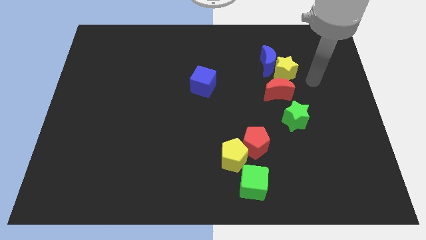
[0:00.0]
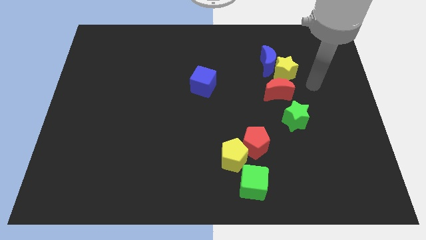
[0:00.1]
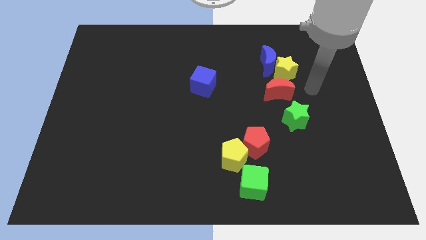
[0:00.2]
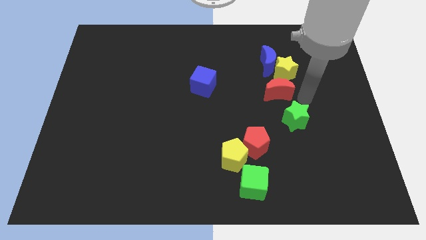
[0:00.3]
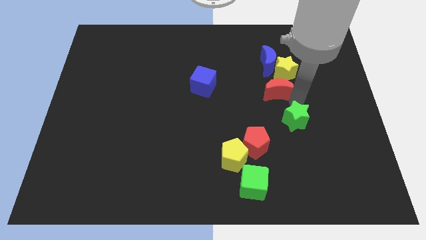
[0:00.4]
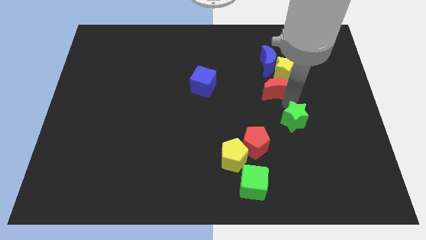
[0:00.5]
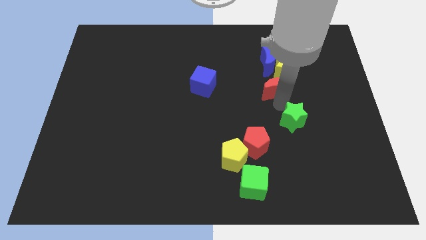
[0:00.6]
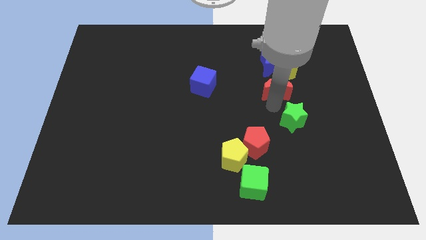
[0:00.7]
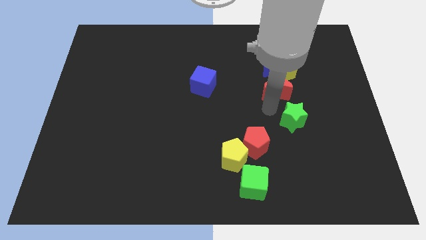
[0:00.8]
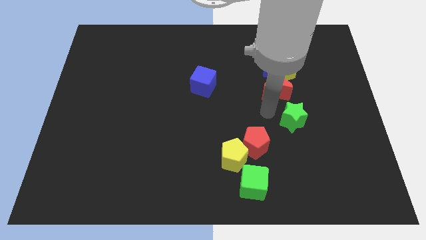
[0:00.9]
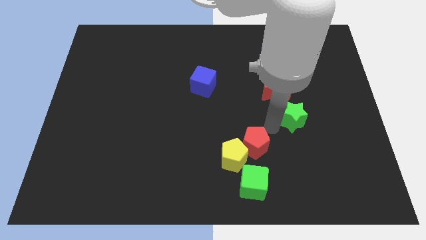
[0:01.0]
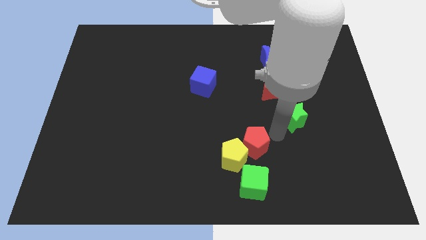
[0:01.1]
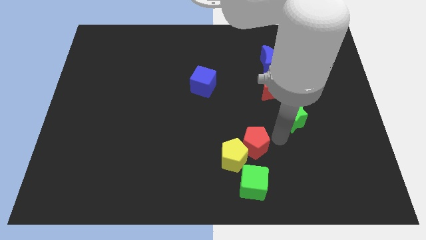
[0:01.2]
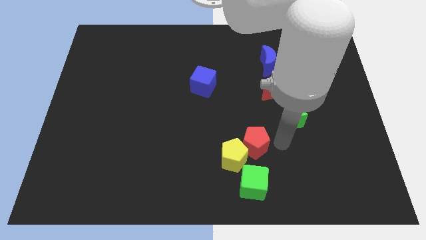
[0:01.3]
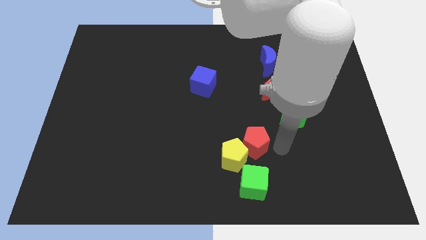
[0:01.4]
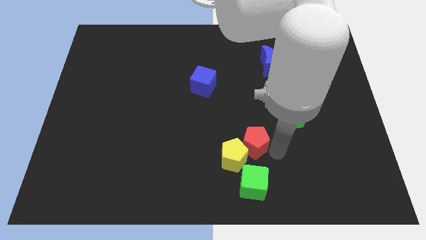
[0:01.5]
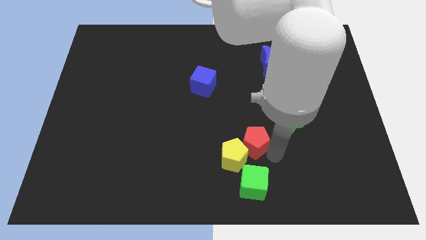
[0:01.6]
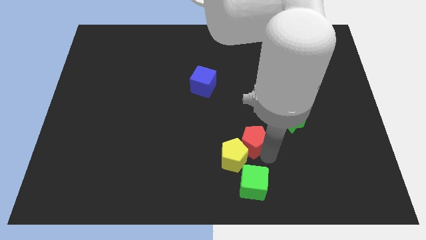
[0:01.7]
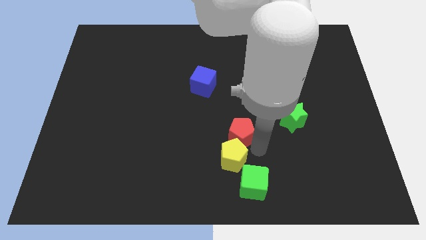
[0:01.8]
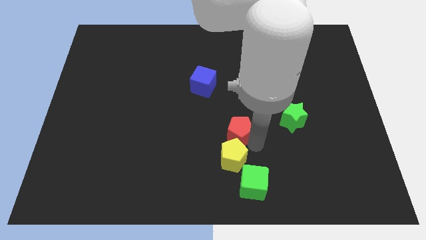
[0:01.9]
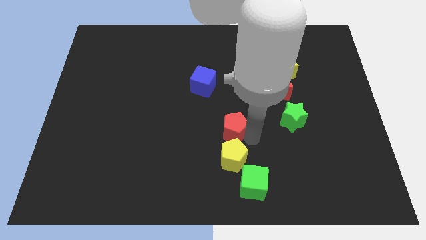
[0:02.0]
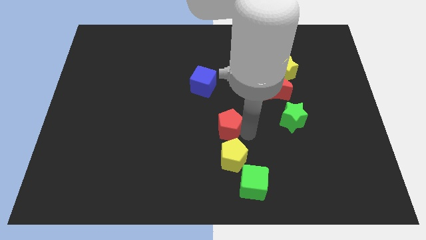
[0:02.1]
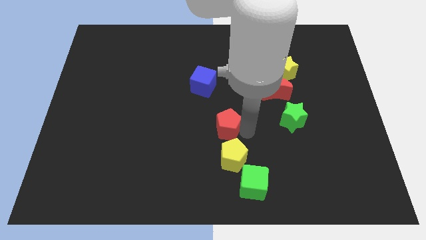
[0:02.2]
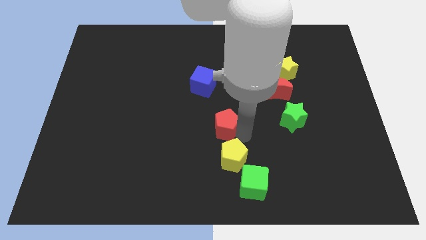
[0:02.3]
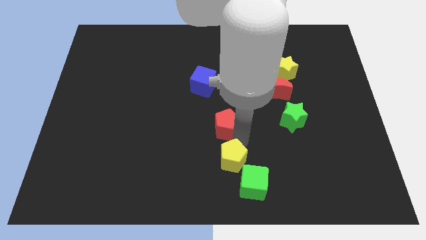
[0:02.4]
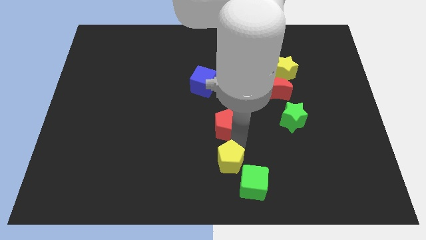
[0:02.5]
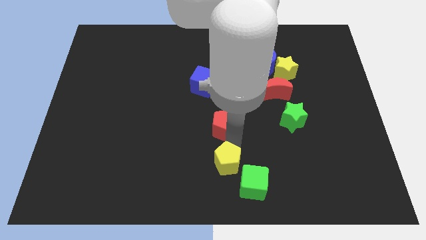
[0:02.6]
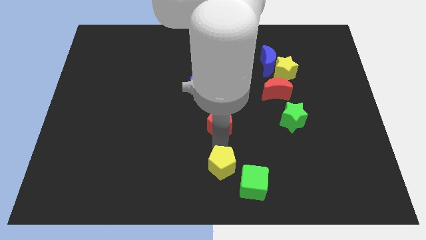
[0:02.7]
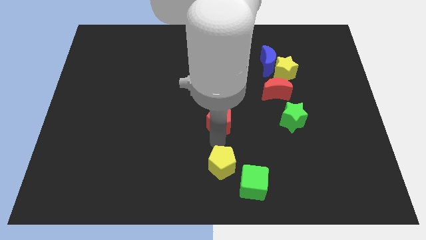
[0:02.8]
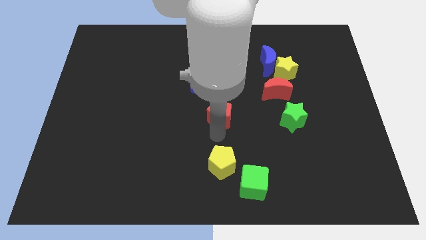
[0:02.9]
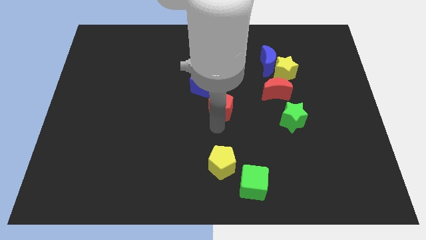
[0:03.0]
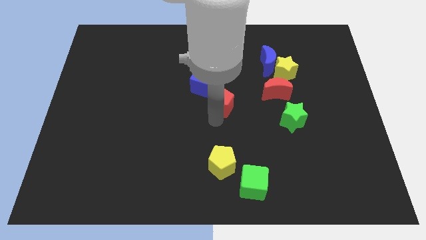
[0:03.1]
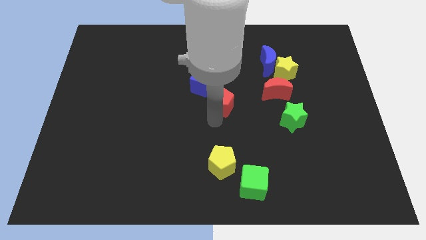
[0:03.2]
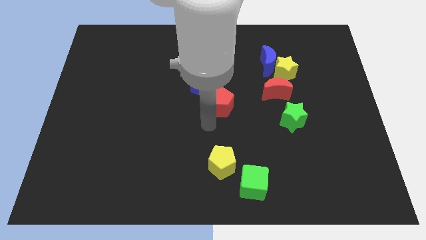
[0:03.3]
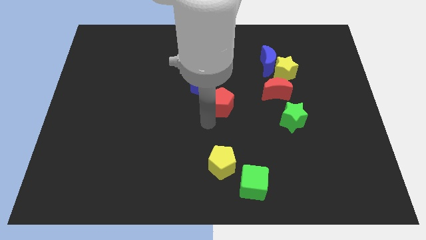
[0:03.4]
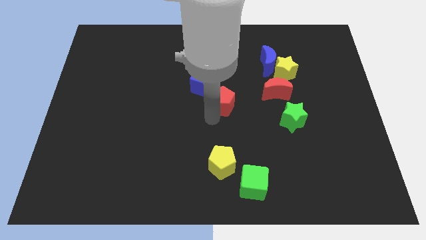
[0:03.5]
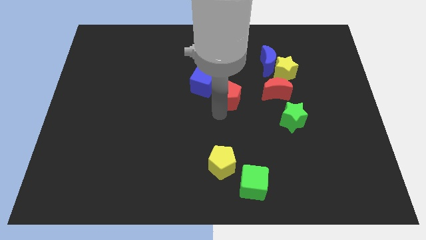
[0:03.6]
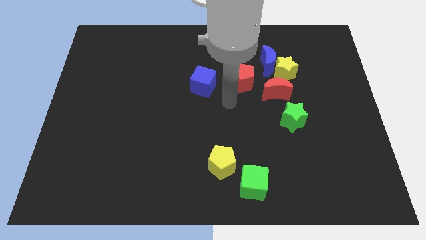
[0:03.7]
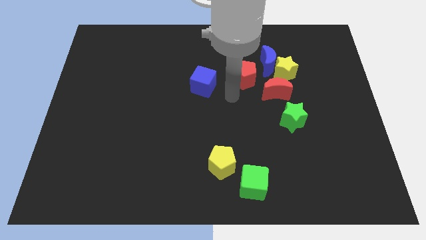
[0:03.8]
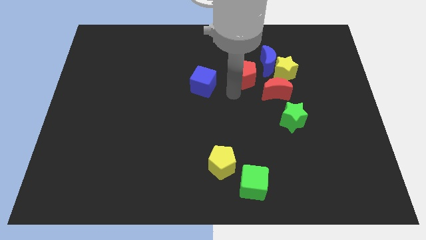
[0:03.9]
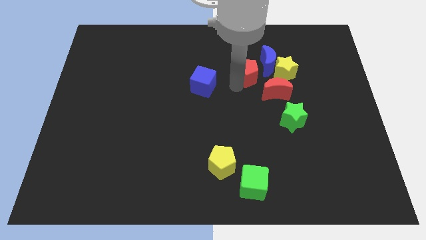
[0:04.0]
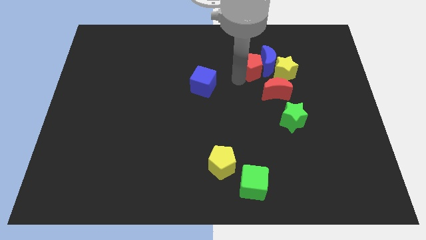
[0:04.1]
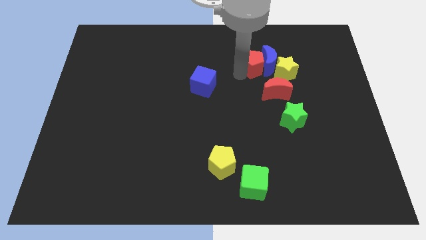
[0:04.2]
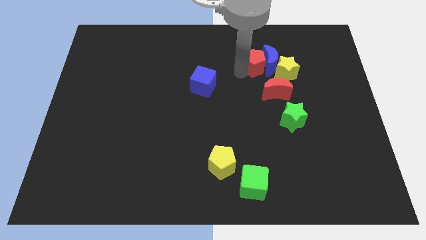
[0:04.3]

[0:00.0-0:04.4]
slide the red pentagon to the blue moon

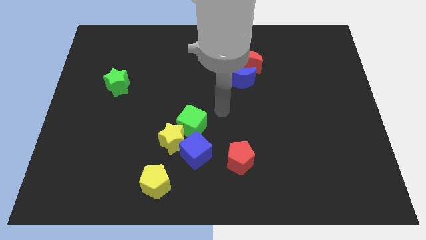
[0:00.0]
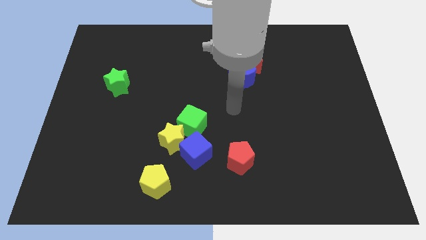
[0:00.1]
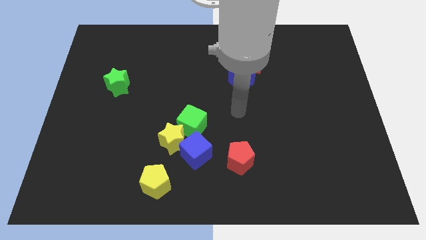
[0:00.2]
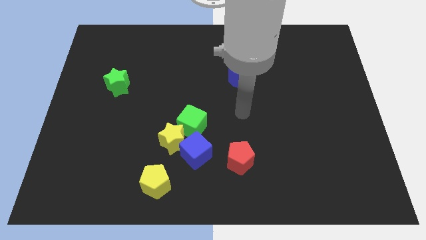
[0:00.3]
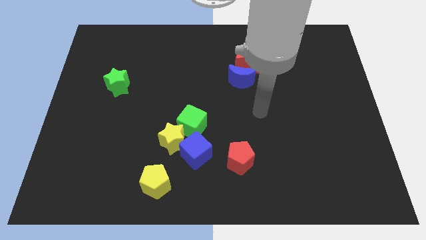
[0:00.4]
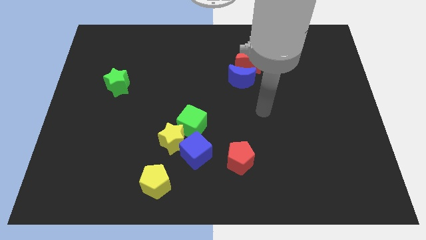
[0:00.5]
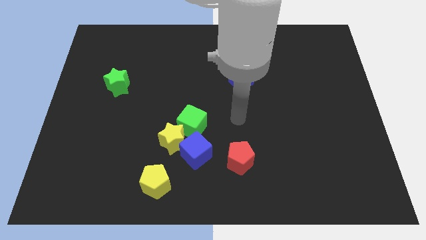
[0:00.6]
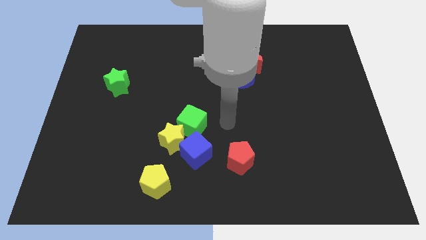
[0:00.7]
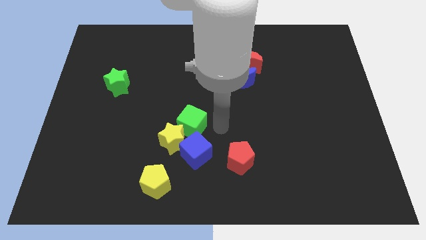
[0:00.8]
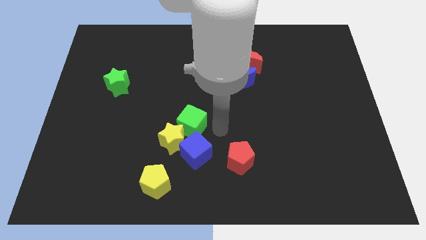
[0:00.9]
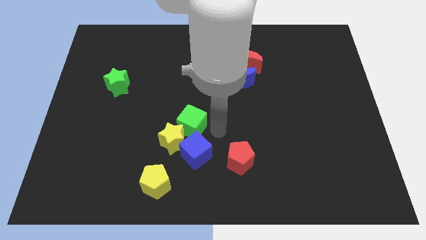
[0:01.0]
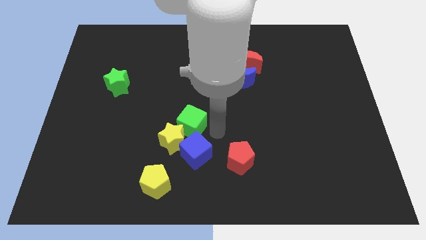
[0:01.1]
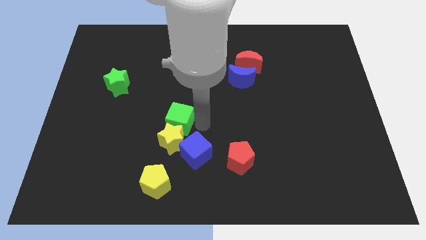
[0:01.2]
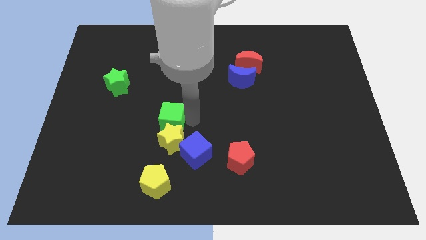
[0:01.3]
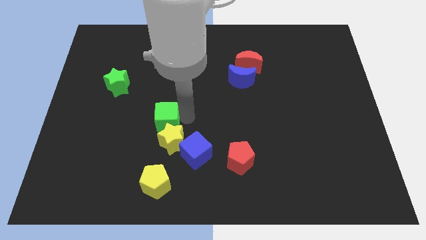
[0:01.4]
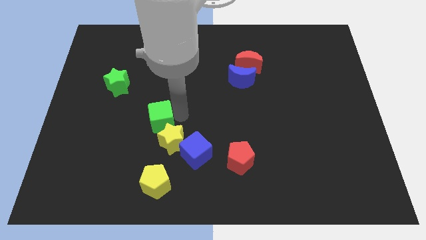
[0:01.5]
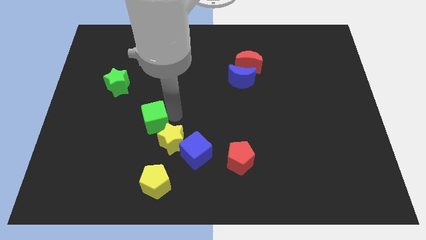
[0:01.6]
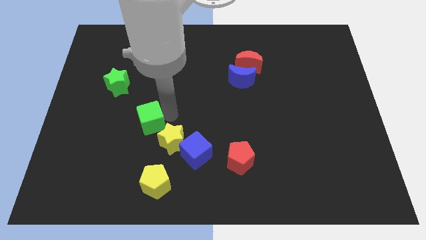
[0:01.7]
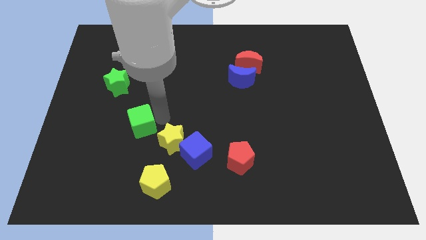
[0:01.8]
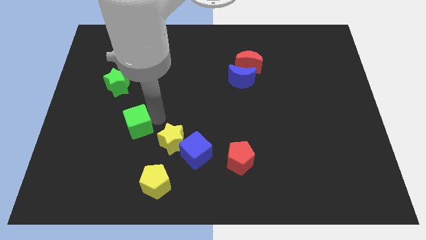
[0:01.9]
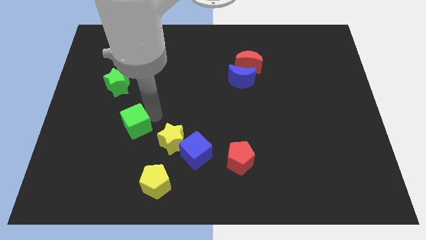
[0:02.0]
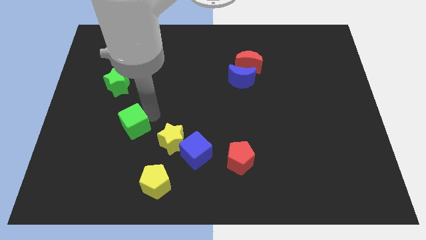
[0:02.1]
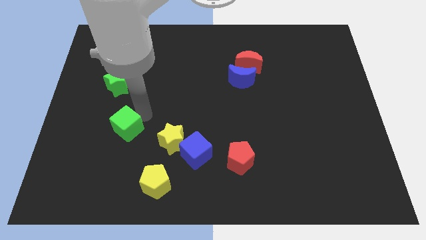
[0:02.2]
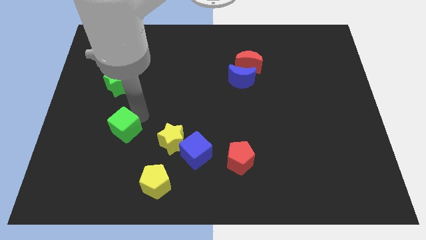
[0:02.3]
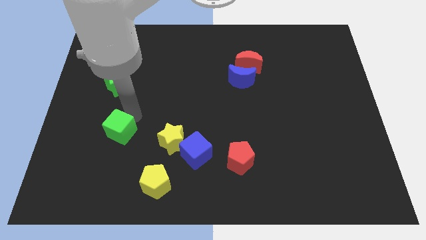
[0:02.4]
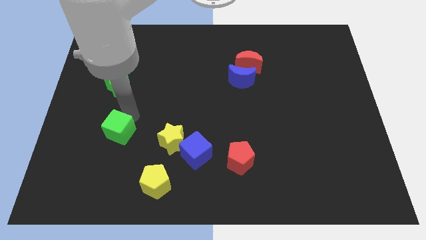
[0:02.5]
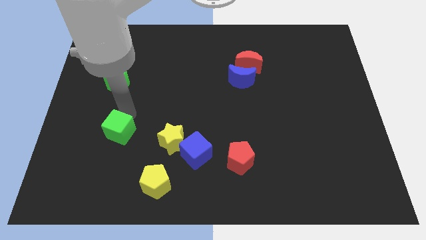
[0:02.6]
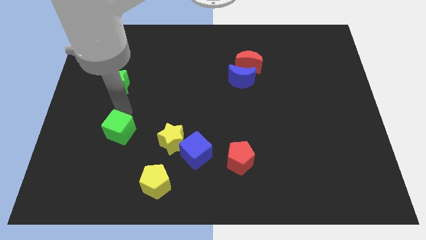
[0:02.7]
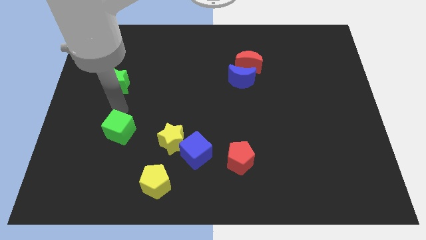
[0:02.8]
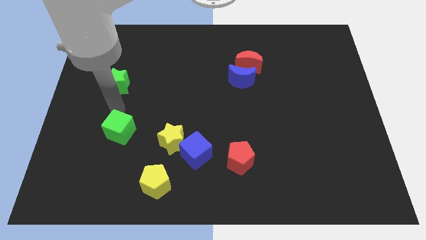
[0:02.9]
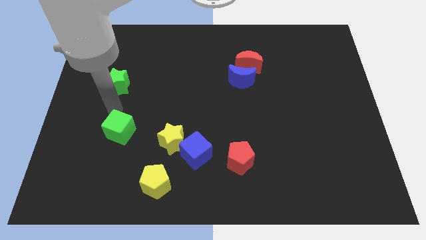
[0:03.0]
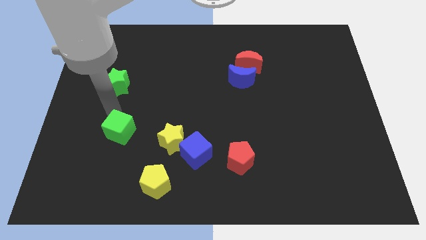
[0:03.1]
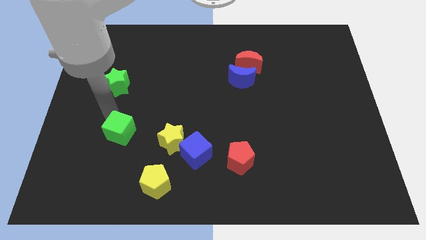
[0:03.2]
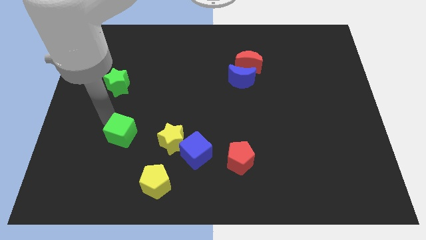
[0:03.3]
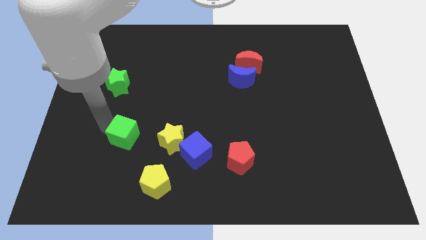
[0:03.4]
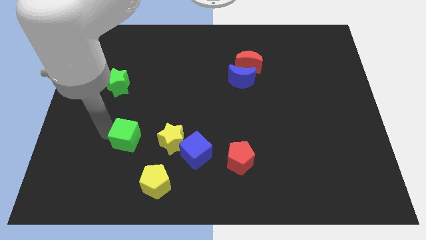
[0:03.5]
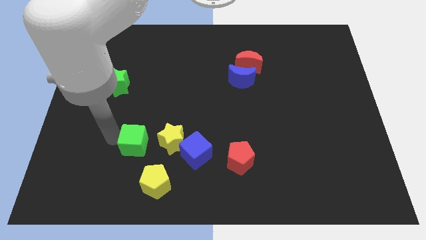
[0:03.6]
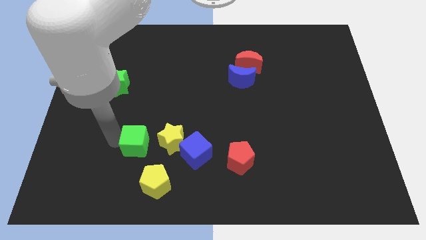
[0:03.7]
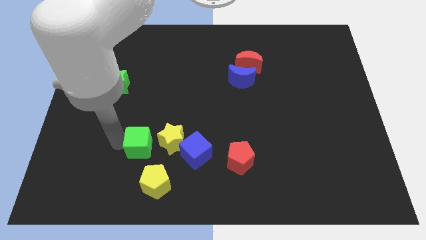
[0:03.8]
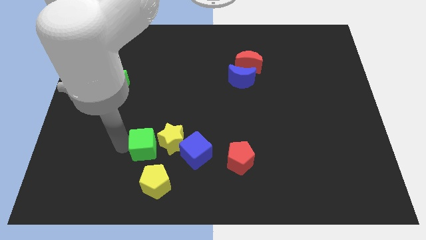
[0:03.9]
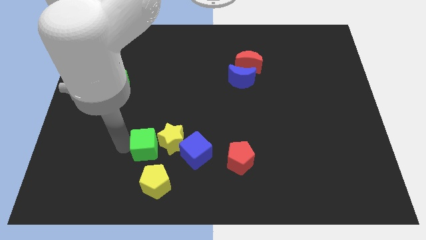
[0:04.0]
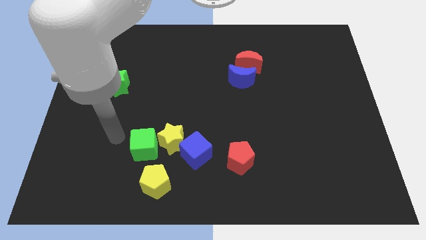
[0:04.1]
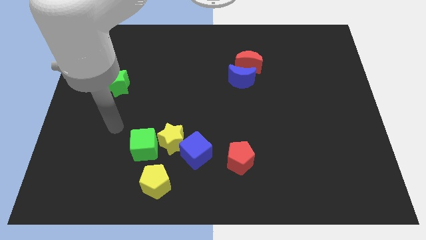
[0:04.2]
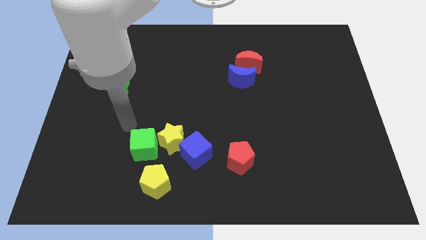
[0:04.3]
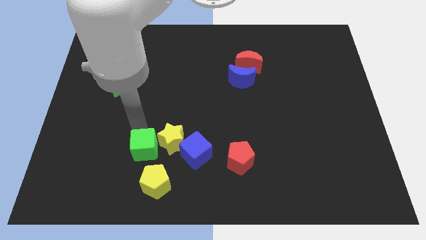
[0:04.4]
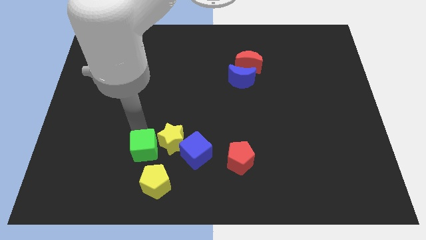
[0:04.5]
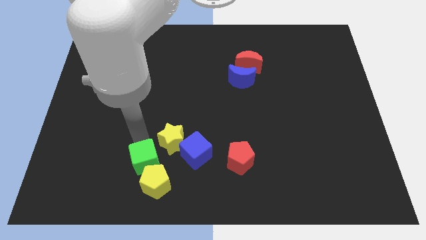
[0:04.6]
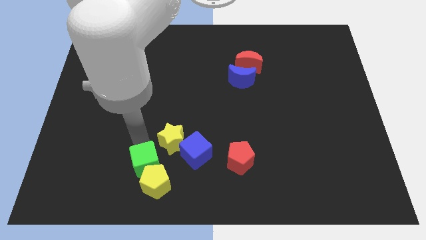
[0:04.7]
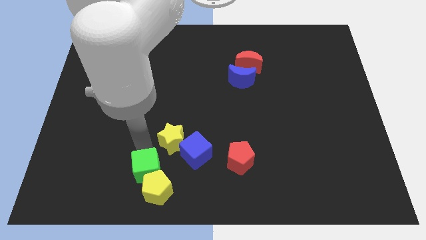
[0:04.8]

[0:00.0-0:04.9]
put the green cube to the yellow pentagon
